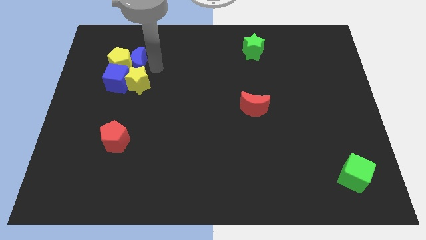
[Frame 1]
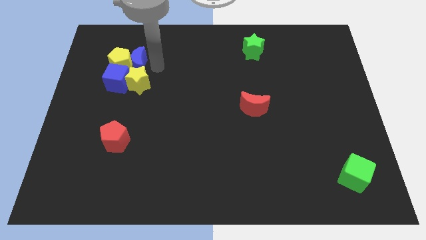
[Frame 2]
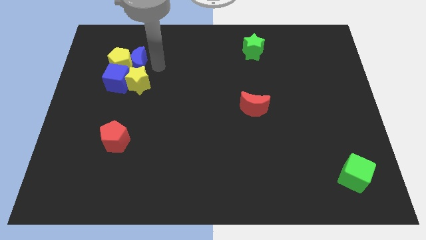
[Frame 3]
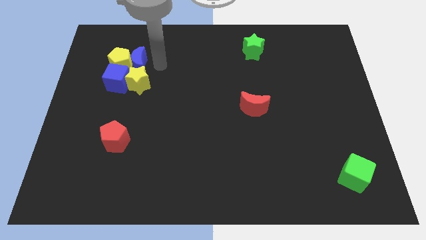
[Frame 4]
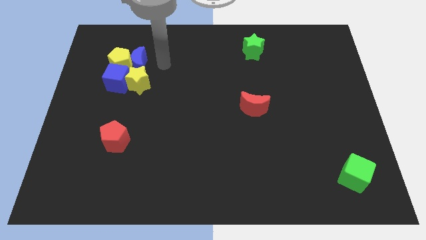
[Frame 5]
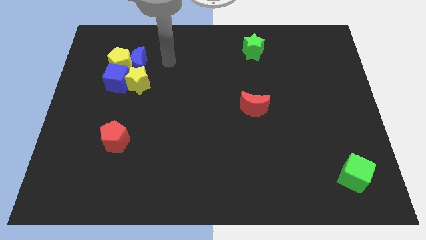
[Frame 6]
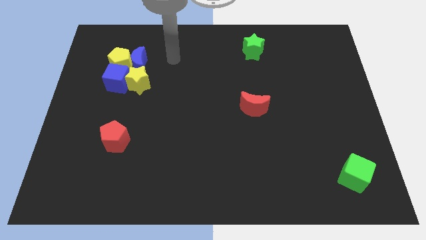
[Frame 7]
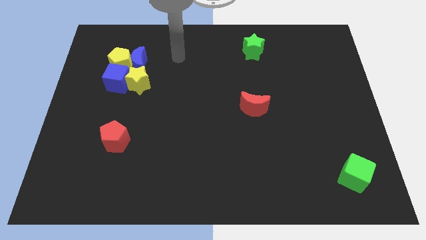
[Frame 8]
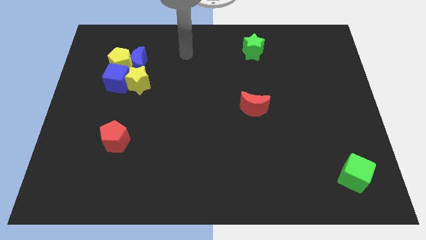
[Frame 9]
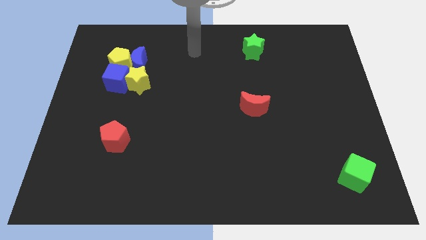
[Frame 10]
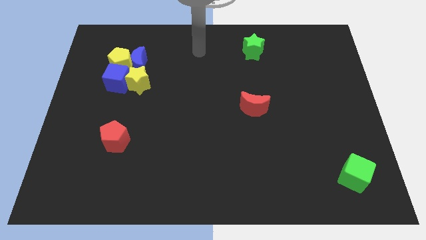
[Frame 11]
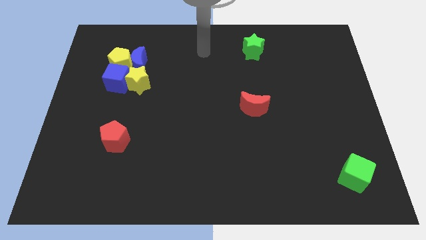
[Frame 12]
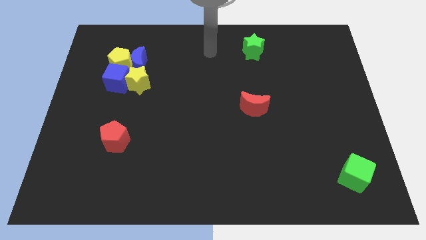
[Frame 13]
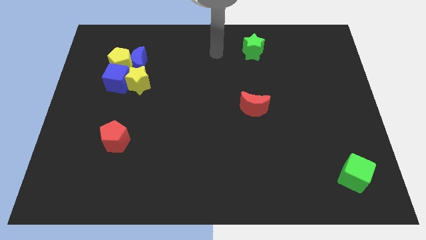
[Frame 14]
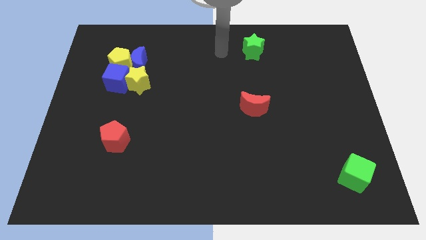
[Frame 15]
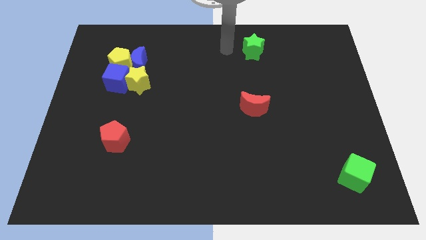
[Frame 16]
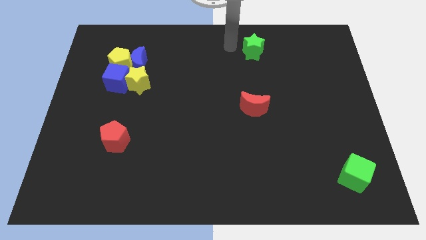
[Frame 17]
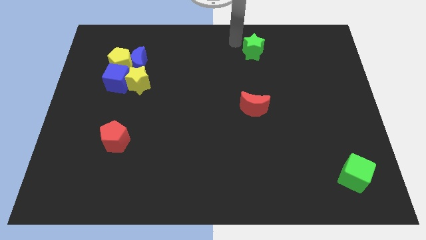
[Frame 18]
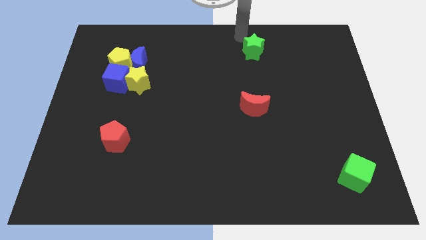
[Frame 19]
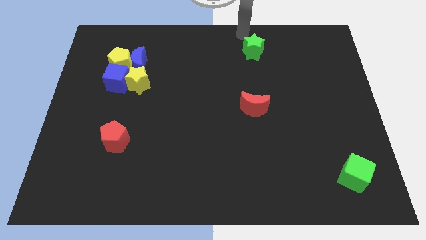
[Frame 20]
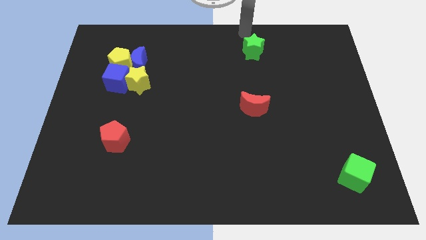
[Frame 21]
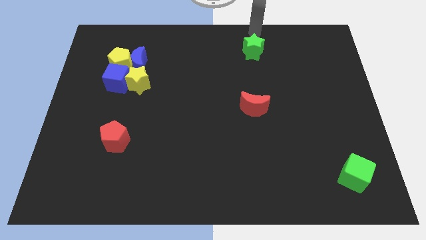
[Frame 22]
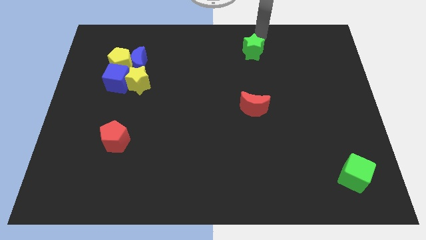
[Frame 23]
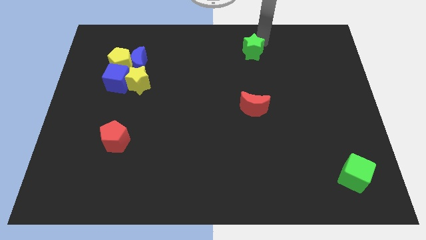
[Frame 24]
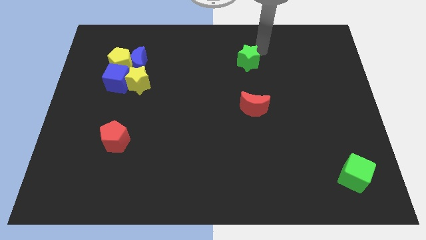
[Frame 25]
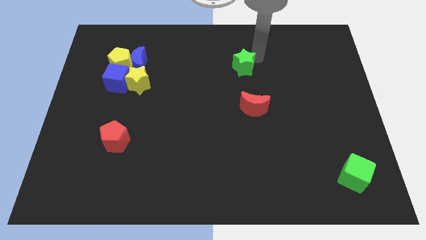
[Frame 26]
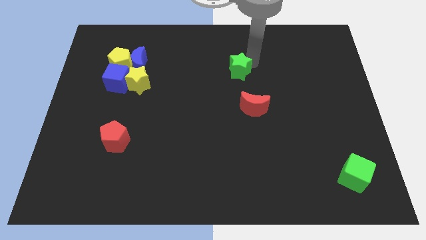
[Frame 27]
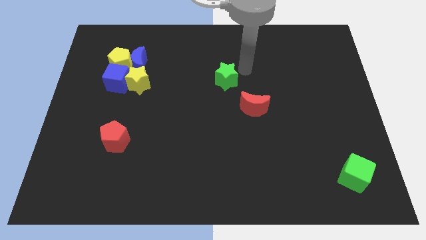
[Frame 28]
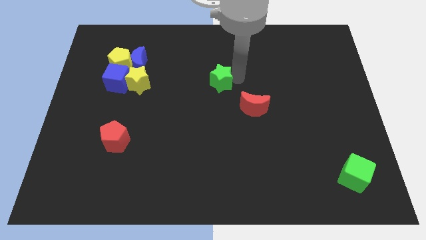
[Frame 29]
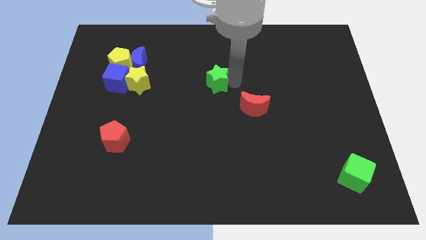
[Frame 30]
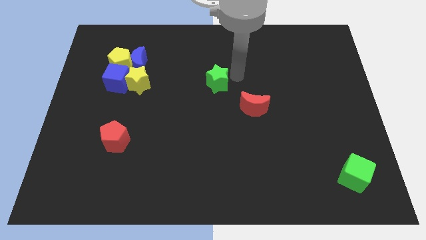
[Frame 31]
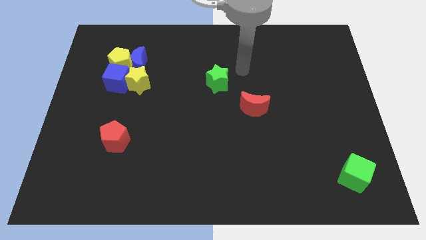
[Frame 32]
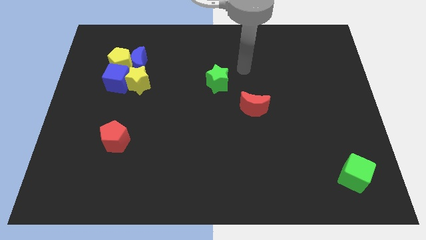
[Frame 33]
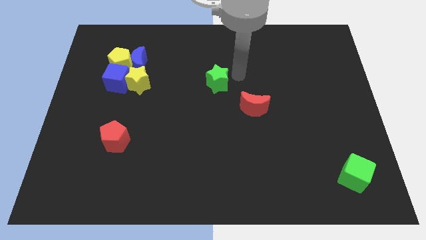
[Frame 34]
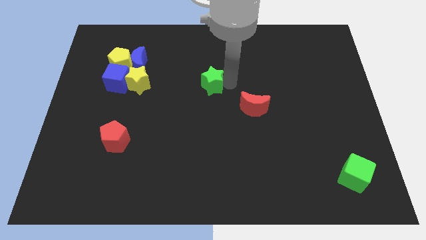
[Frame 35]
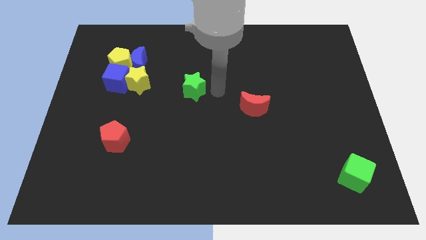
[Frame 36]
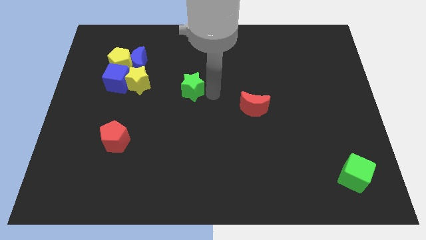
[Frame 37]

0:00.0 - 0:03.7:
place the green star diagonally to the left of the red crescent

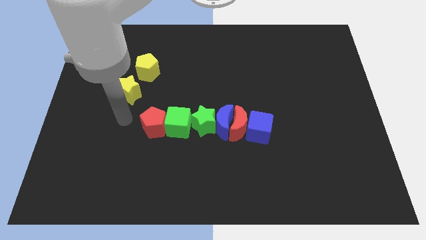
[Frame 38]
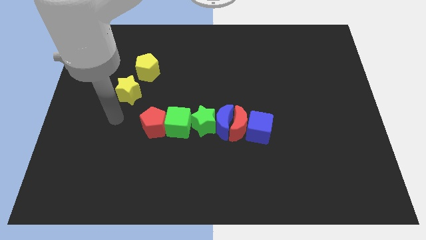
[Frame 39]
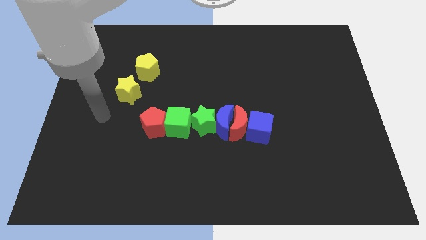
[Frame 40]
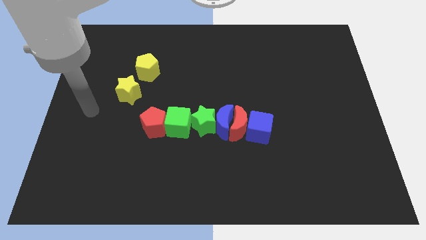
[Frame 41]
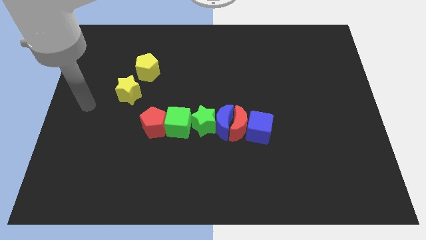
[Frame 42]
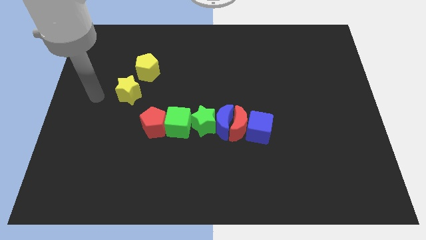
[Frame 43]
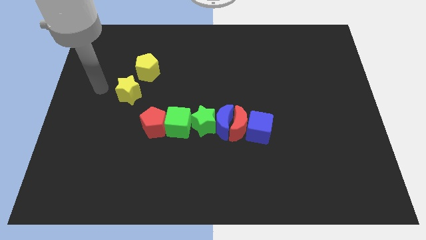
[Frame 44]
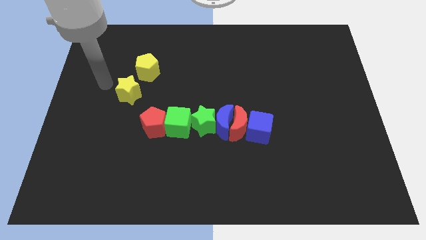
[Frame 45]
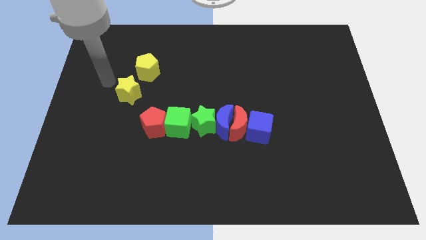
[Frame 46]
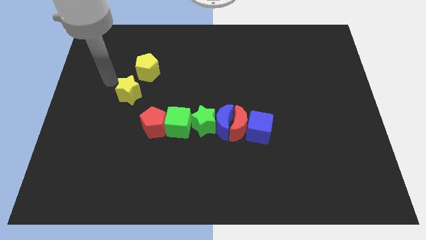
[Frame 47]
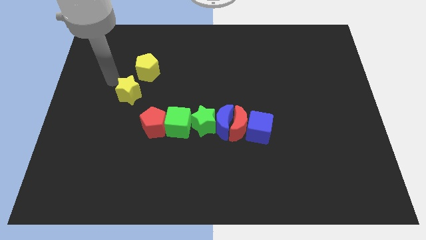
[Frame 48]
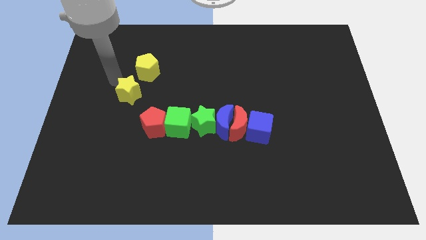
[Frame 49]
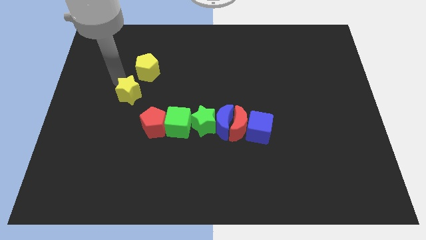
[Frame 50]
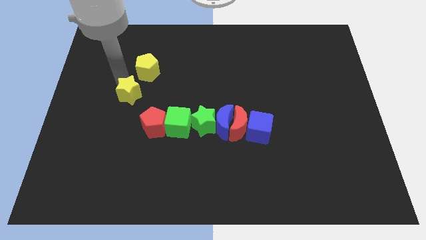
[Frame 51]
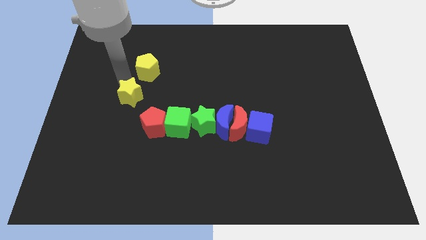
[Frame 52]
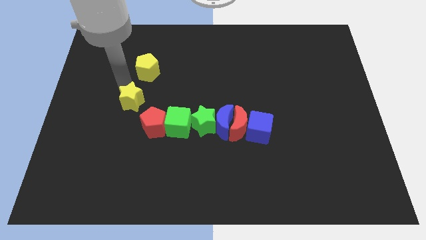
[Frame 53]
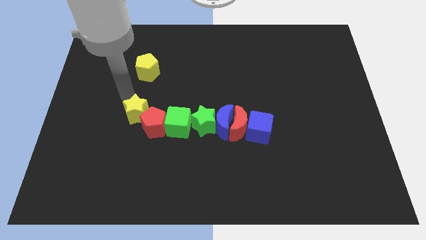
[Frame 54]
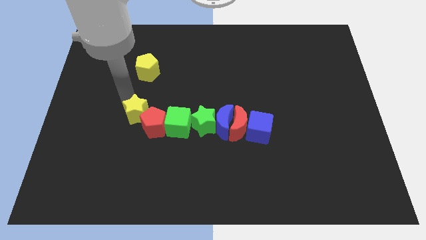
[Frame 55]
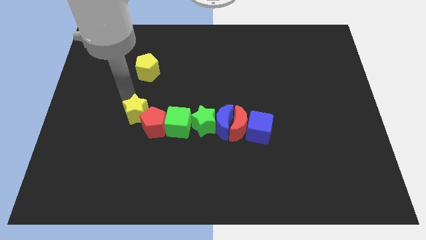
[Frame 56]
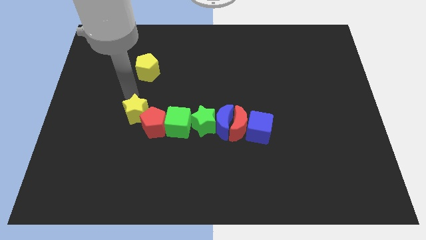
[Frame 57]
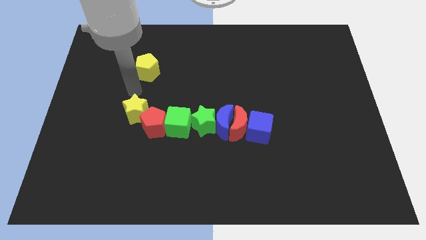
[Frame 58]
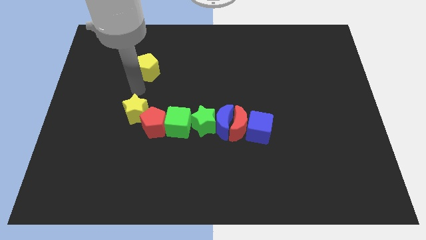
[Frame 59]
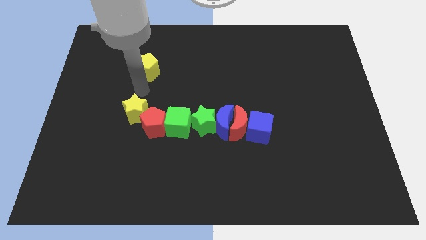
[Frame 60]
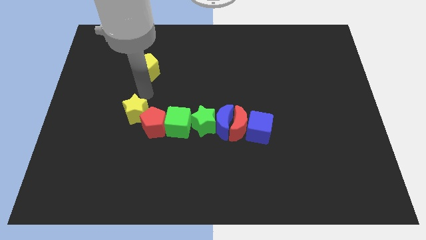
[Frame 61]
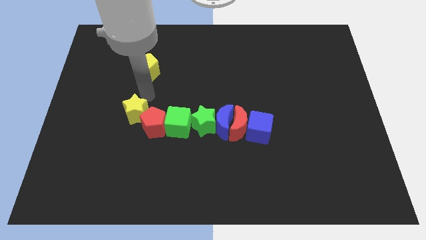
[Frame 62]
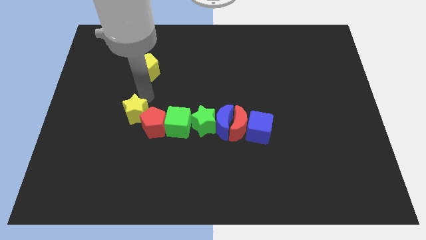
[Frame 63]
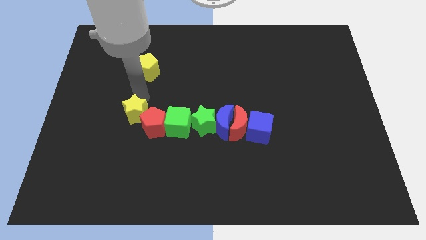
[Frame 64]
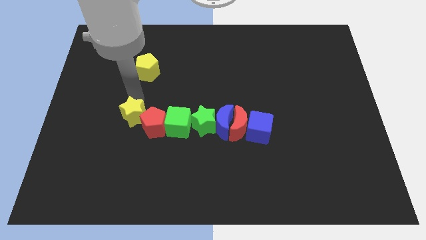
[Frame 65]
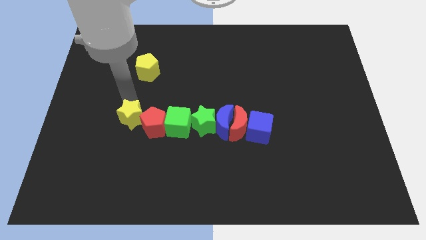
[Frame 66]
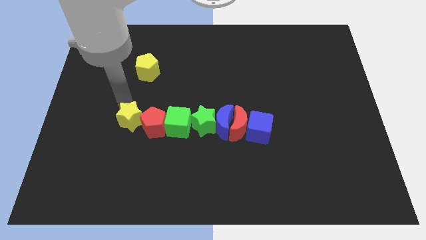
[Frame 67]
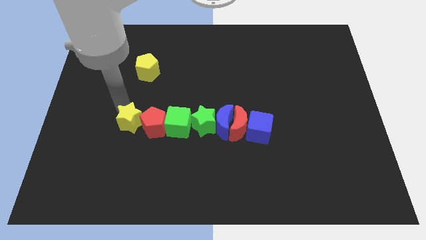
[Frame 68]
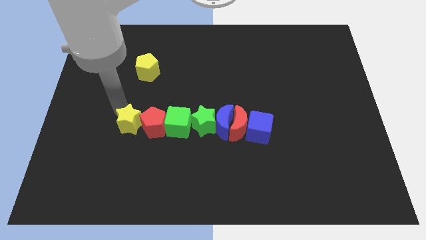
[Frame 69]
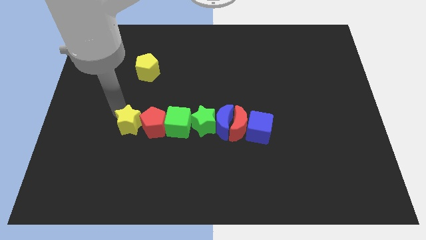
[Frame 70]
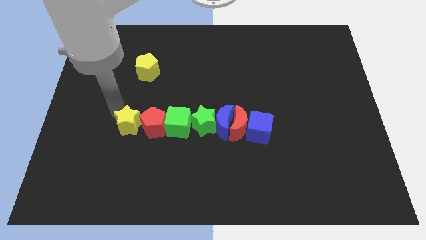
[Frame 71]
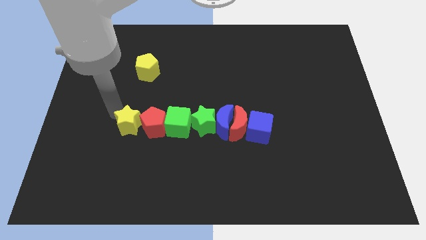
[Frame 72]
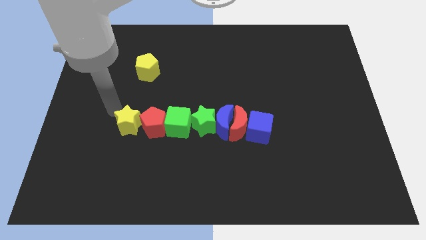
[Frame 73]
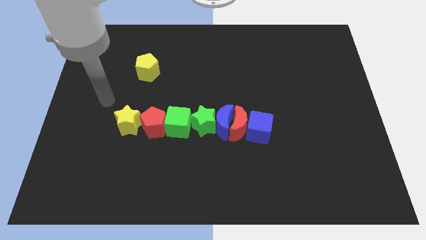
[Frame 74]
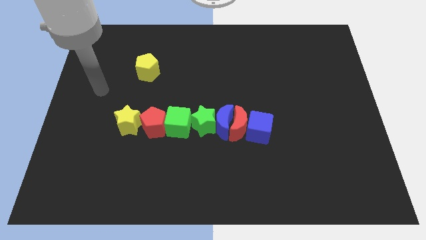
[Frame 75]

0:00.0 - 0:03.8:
place the yellow star horizontally at the left side of the red pentagon

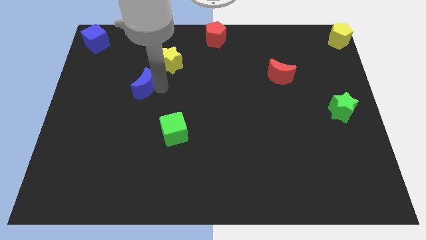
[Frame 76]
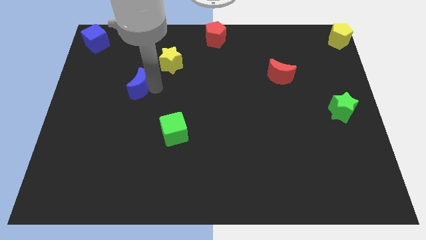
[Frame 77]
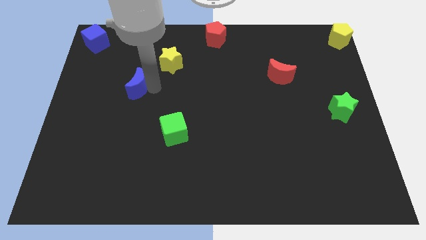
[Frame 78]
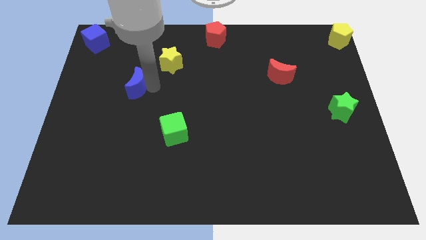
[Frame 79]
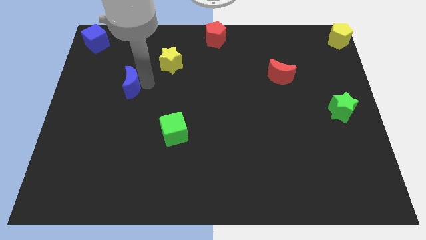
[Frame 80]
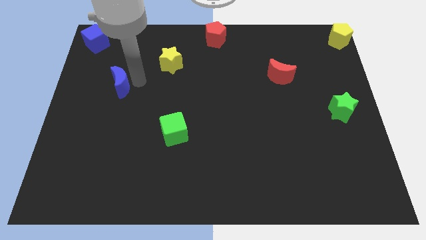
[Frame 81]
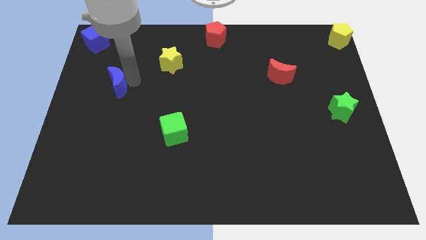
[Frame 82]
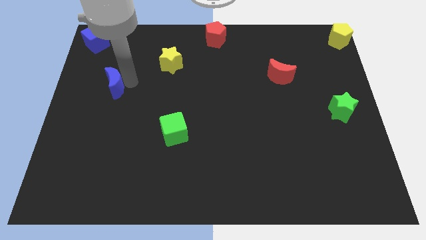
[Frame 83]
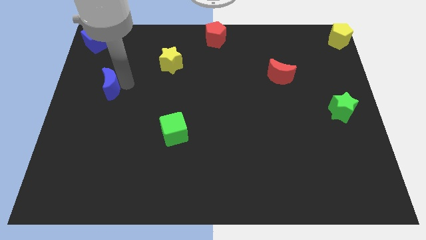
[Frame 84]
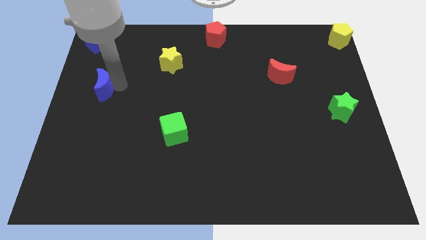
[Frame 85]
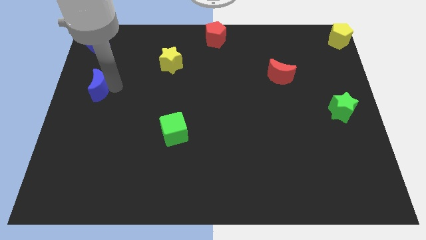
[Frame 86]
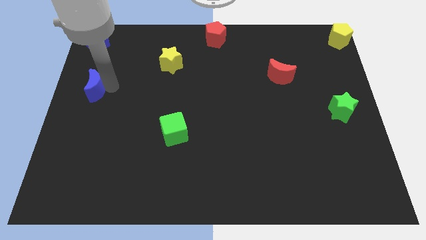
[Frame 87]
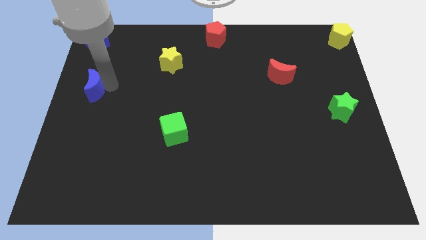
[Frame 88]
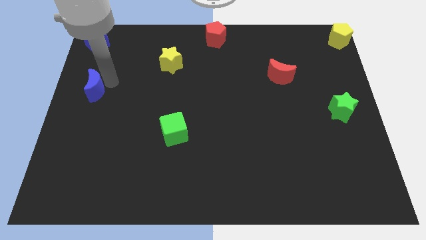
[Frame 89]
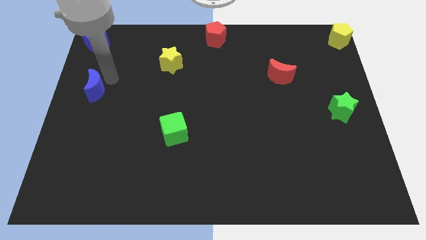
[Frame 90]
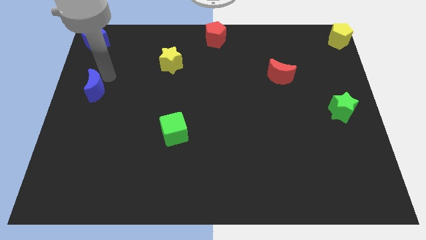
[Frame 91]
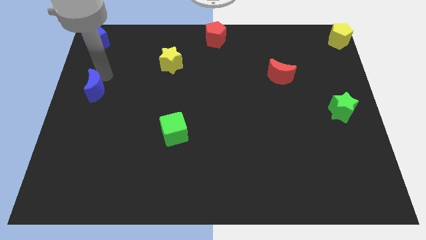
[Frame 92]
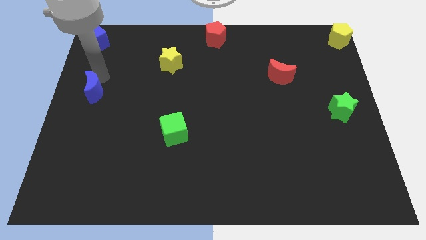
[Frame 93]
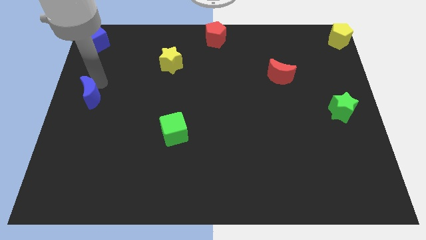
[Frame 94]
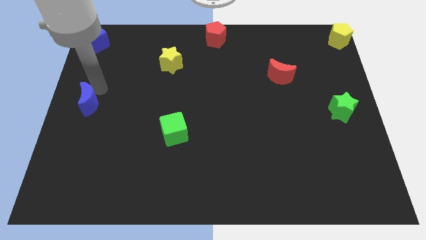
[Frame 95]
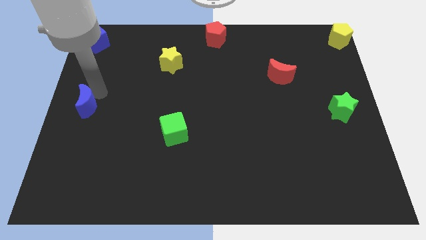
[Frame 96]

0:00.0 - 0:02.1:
push the blue moon vertically below the blue cube
